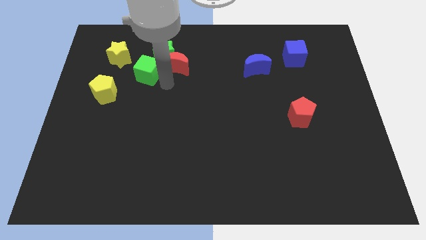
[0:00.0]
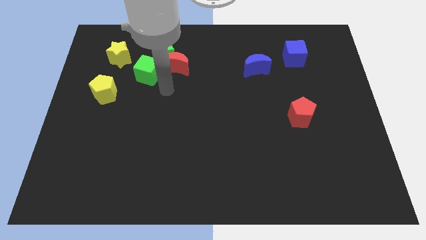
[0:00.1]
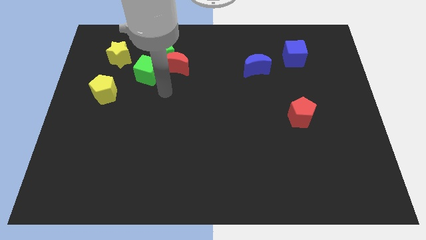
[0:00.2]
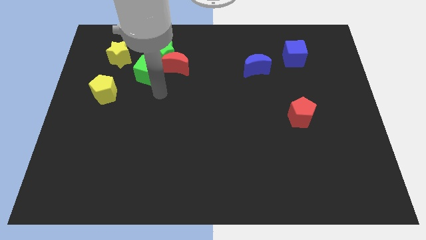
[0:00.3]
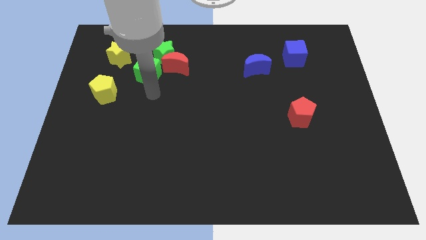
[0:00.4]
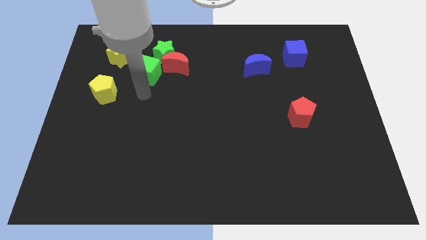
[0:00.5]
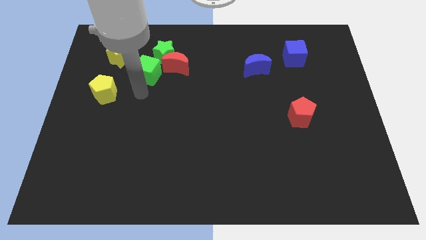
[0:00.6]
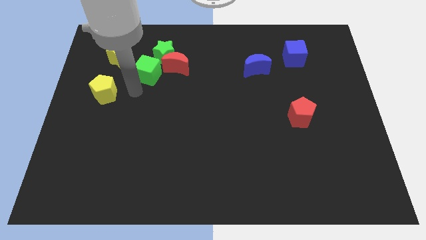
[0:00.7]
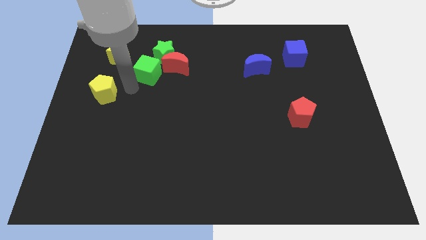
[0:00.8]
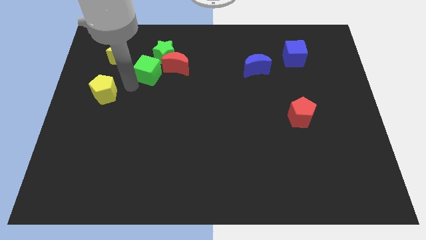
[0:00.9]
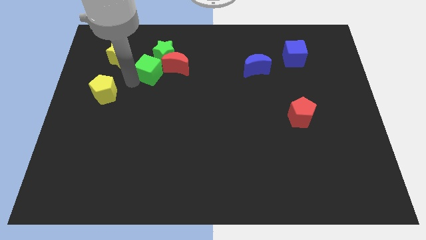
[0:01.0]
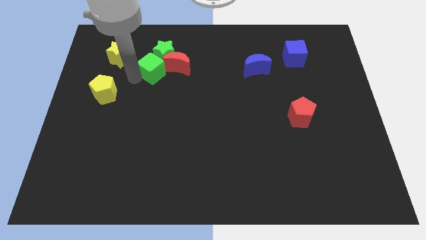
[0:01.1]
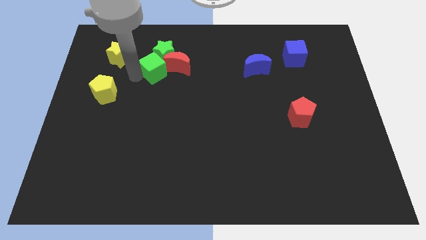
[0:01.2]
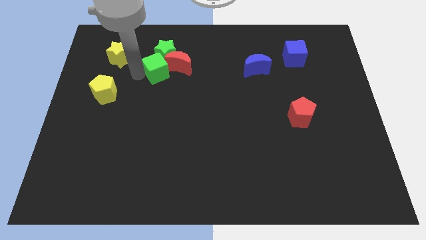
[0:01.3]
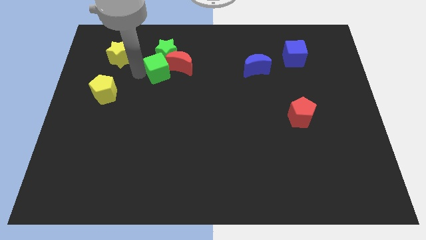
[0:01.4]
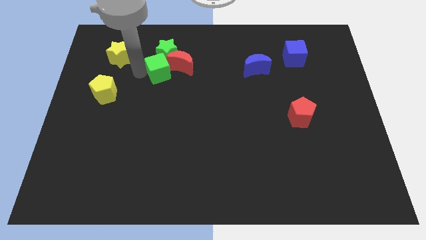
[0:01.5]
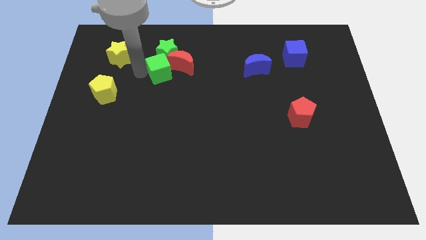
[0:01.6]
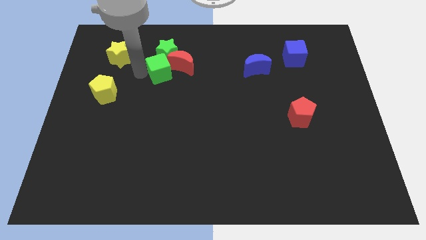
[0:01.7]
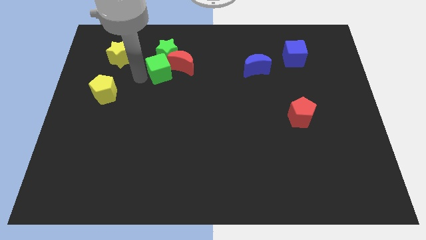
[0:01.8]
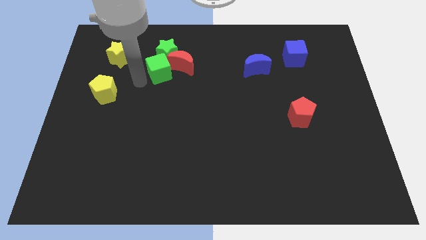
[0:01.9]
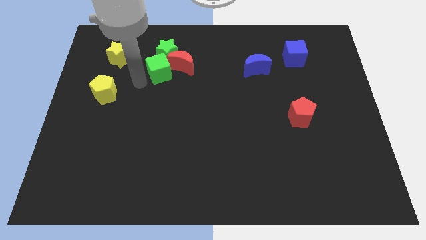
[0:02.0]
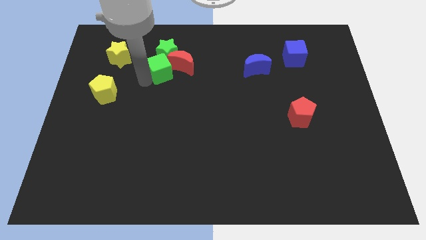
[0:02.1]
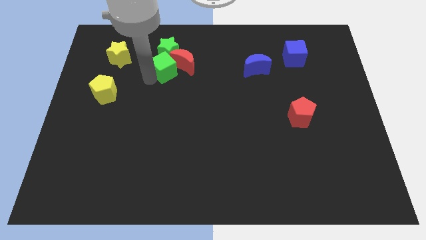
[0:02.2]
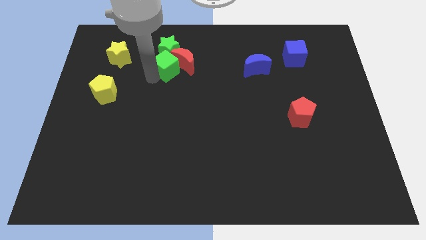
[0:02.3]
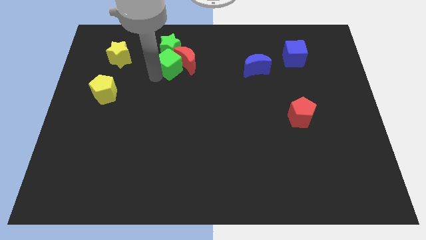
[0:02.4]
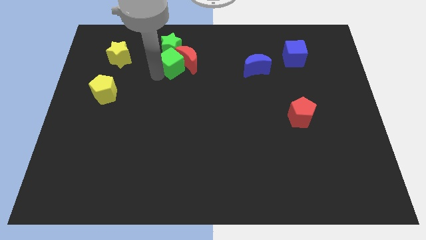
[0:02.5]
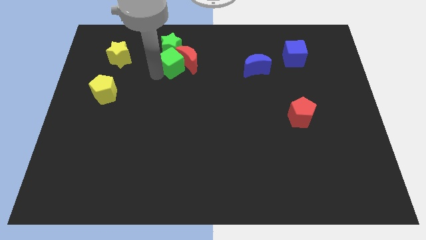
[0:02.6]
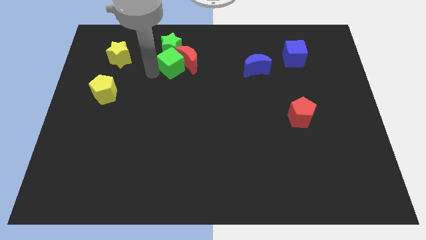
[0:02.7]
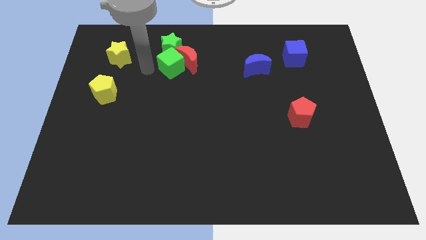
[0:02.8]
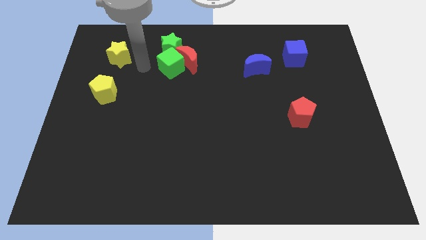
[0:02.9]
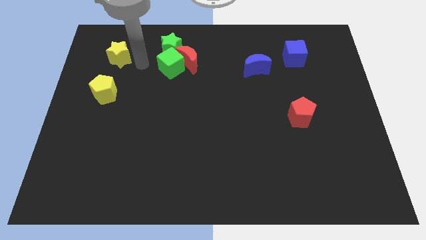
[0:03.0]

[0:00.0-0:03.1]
push the green cube into the bottom side of the green star

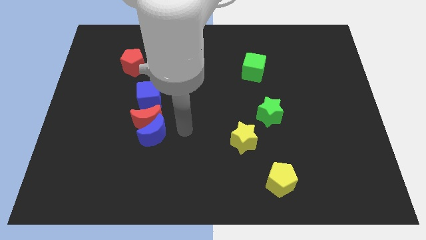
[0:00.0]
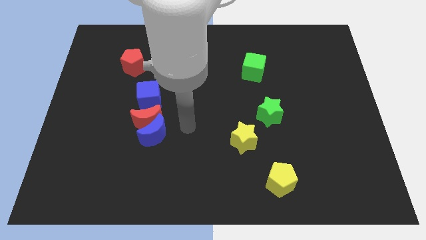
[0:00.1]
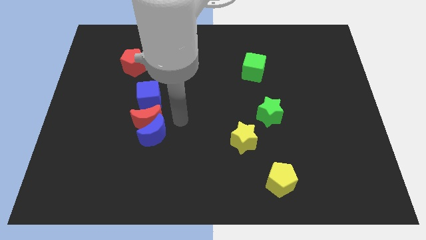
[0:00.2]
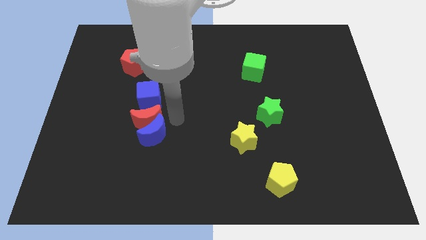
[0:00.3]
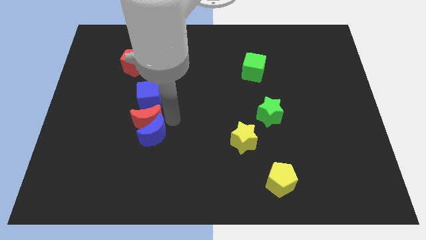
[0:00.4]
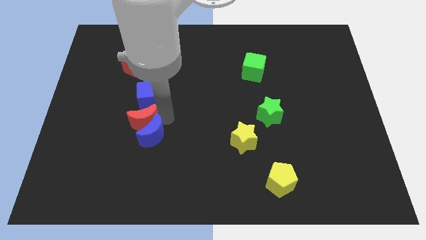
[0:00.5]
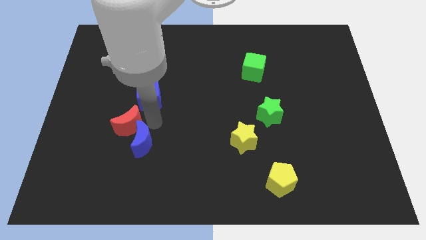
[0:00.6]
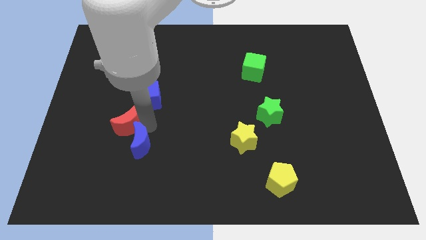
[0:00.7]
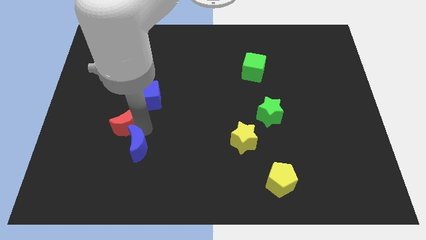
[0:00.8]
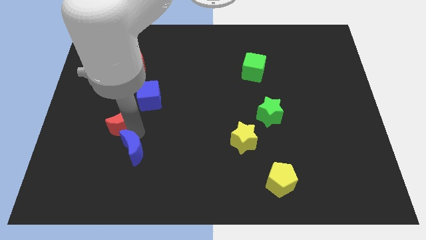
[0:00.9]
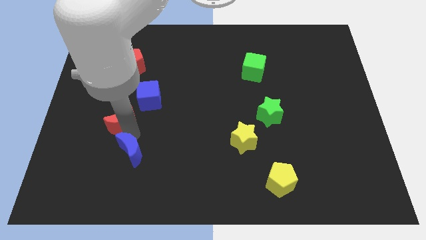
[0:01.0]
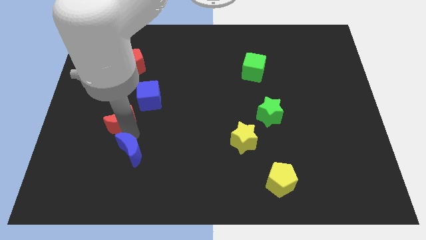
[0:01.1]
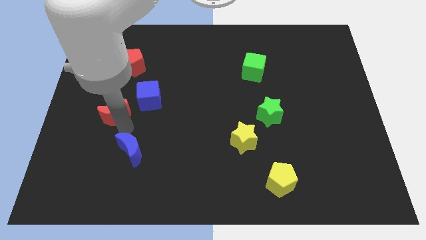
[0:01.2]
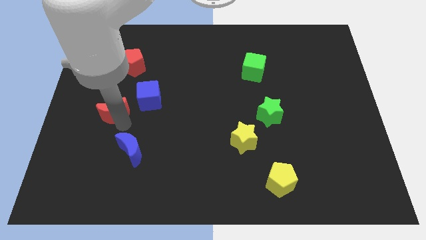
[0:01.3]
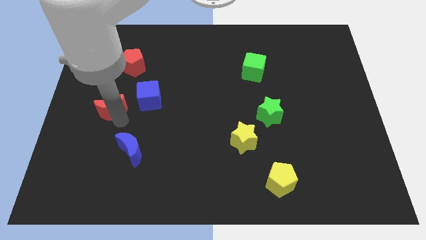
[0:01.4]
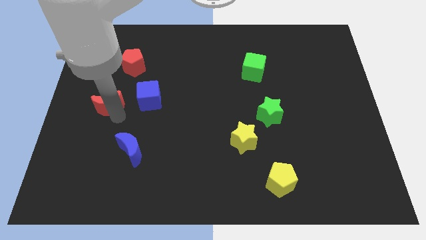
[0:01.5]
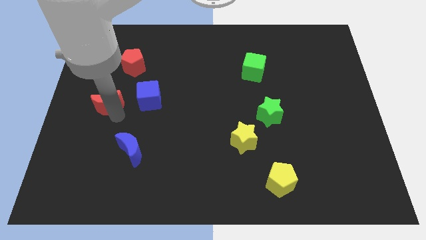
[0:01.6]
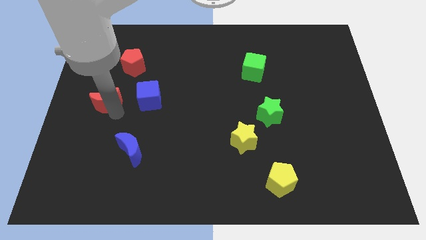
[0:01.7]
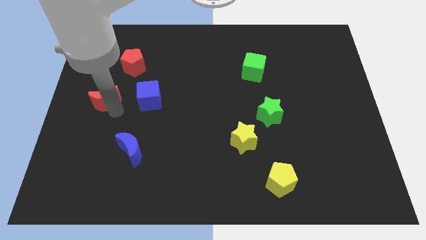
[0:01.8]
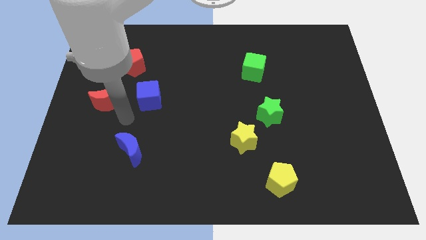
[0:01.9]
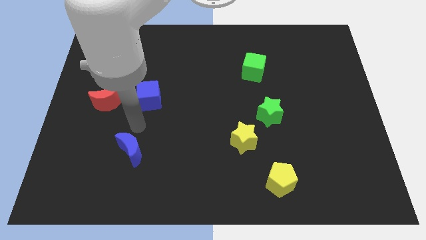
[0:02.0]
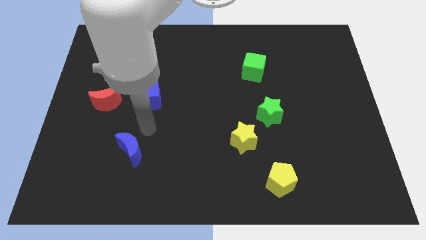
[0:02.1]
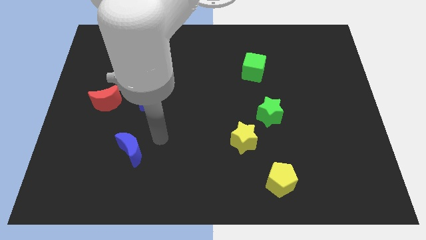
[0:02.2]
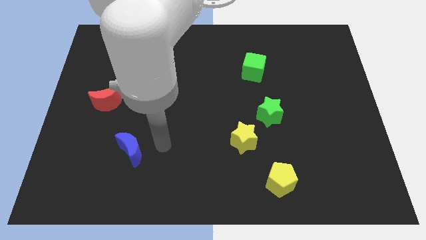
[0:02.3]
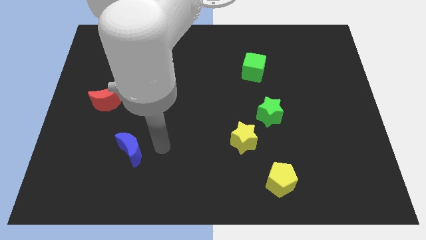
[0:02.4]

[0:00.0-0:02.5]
place the red crescent to the left of the blue cube

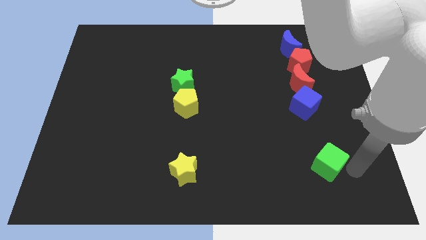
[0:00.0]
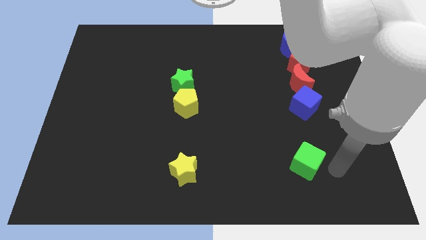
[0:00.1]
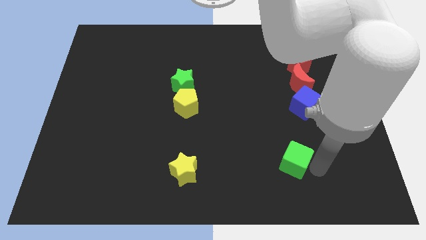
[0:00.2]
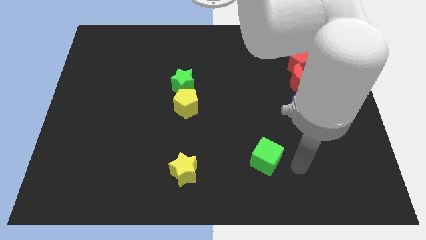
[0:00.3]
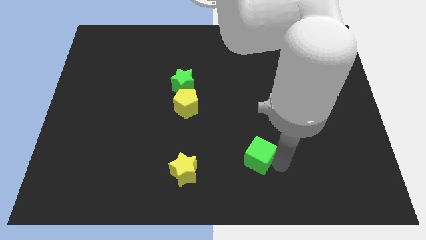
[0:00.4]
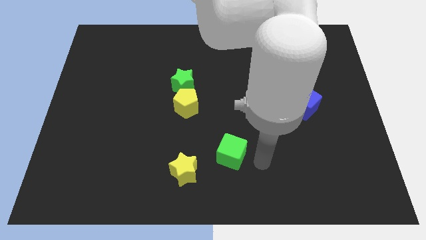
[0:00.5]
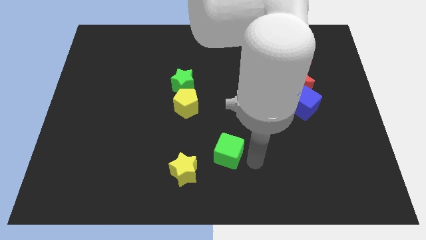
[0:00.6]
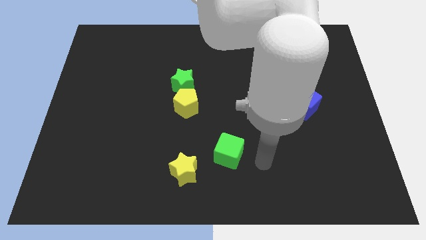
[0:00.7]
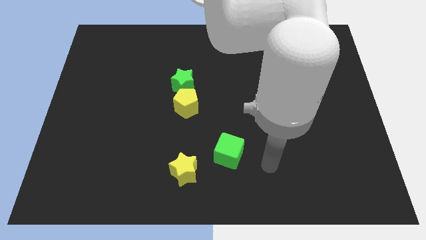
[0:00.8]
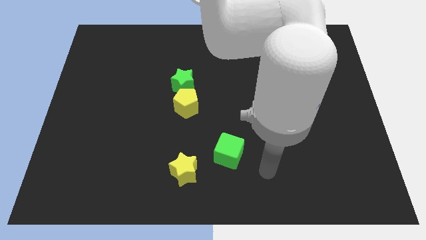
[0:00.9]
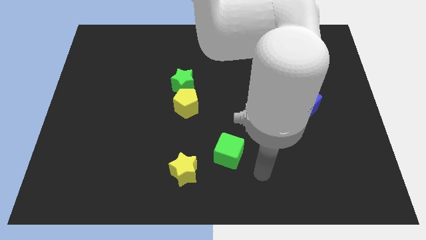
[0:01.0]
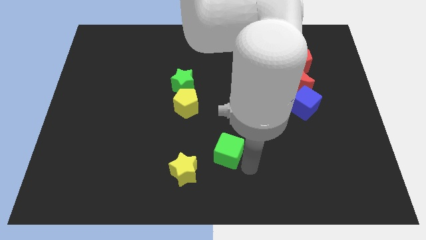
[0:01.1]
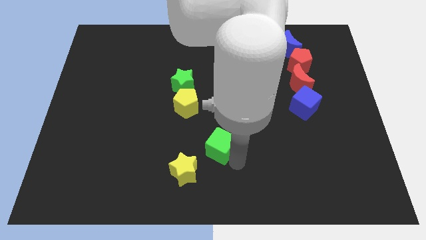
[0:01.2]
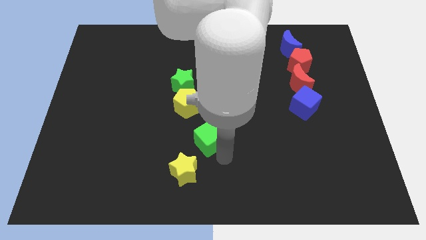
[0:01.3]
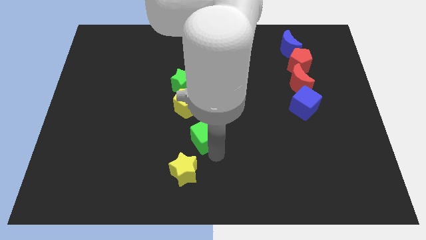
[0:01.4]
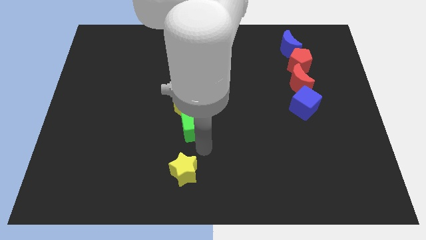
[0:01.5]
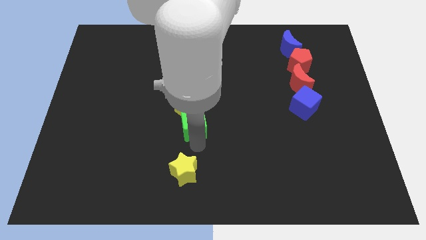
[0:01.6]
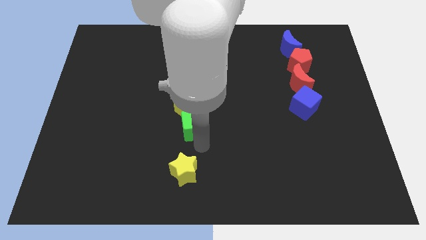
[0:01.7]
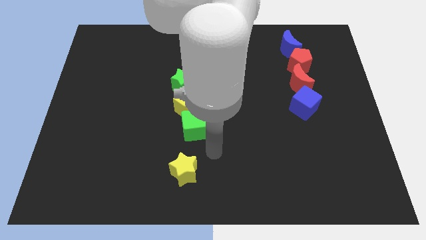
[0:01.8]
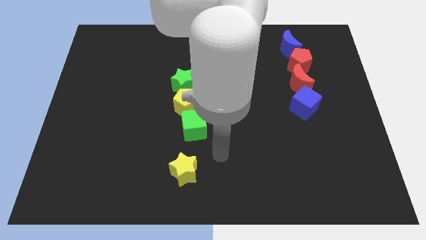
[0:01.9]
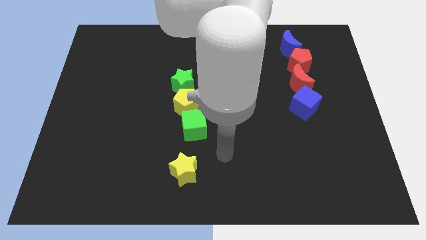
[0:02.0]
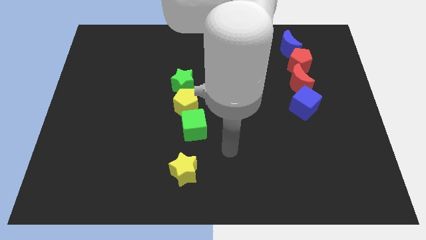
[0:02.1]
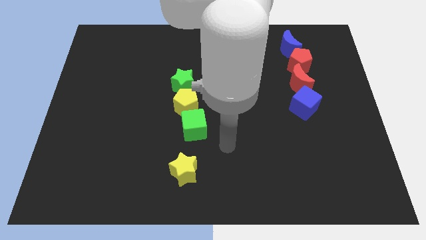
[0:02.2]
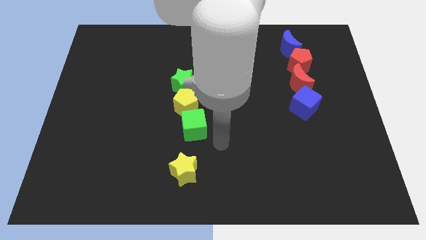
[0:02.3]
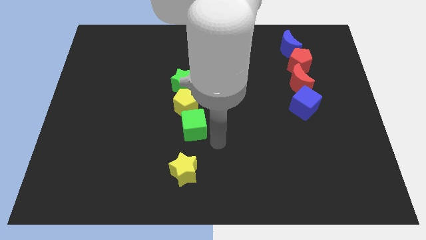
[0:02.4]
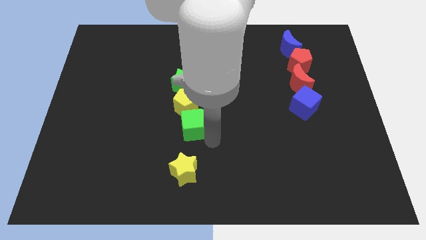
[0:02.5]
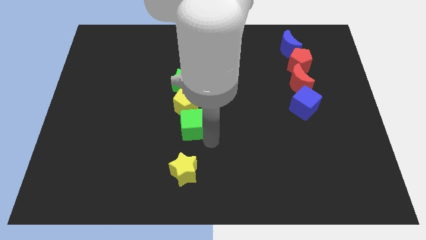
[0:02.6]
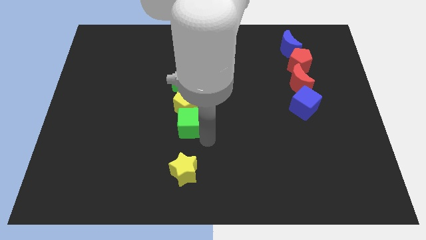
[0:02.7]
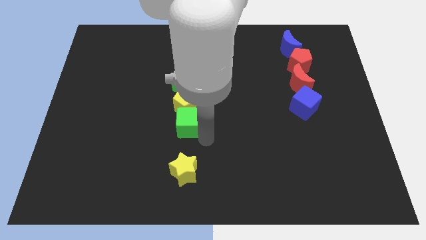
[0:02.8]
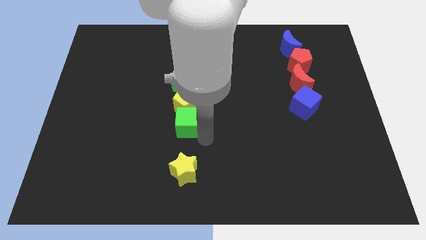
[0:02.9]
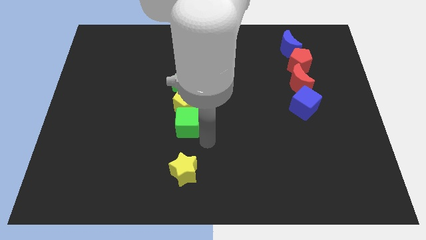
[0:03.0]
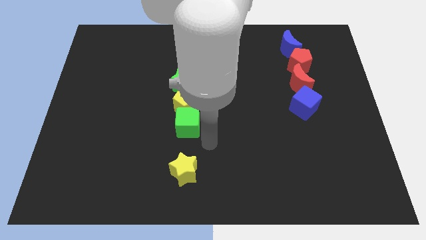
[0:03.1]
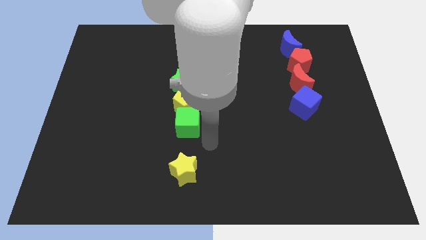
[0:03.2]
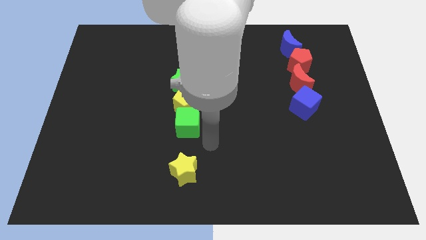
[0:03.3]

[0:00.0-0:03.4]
move the green cube to the bottom of the yellow pentagon
